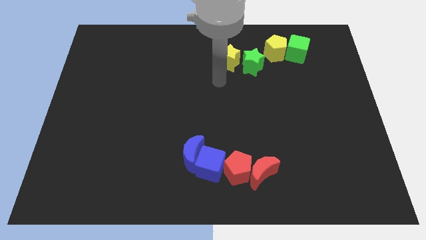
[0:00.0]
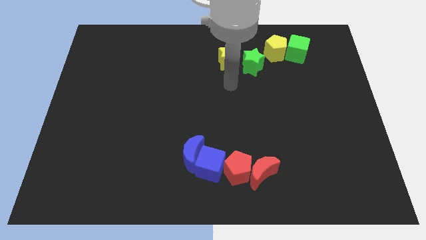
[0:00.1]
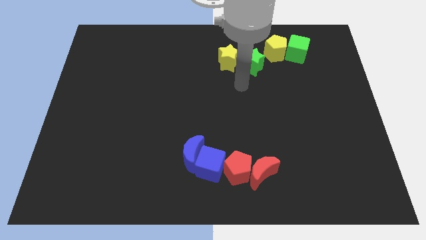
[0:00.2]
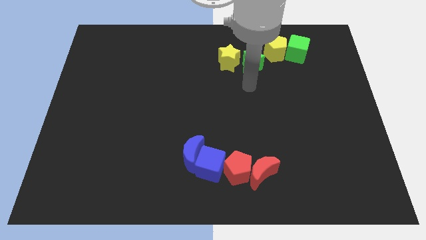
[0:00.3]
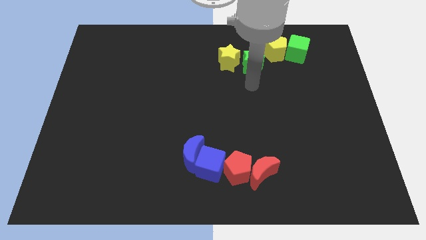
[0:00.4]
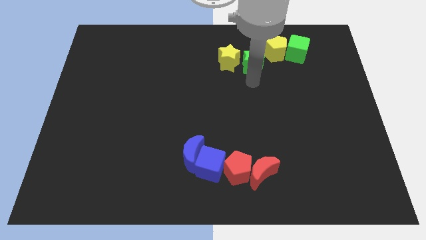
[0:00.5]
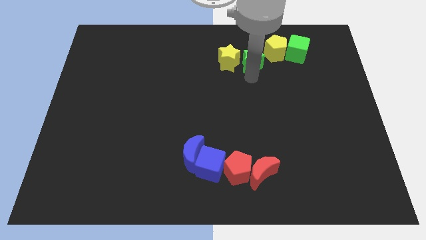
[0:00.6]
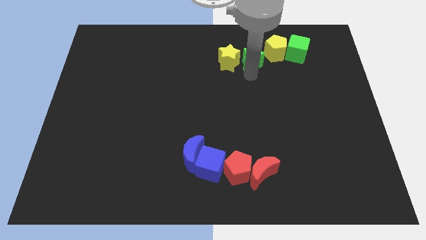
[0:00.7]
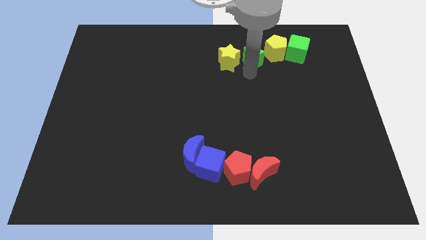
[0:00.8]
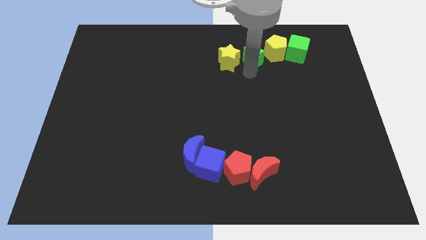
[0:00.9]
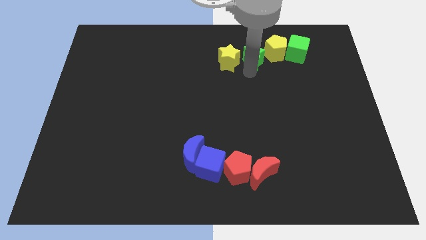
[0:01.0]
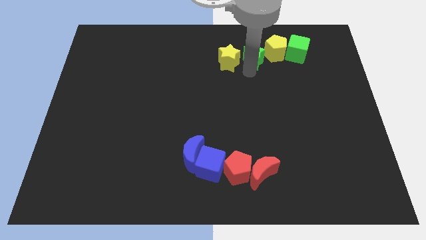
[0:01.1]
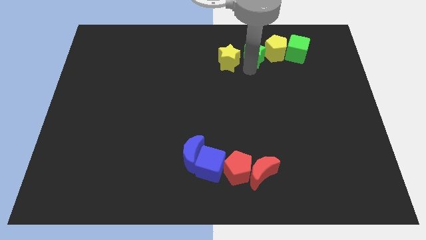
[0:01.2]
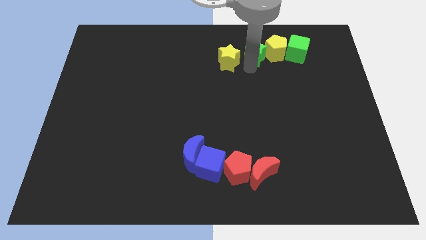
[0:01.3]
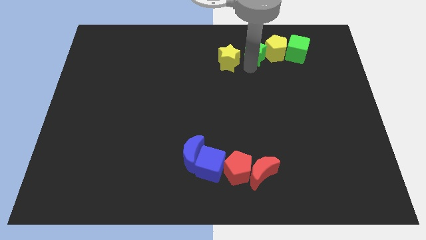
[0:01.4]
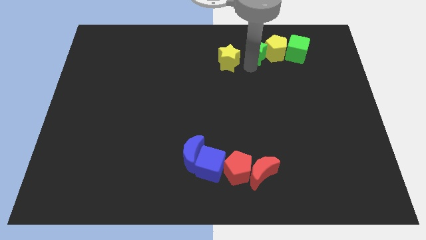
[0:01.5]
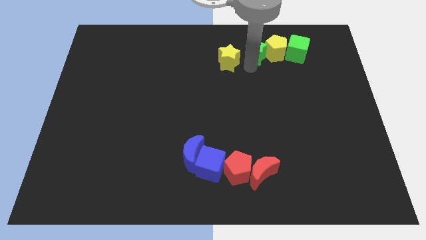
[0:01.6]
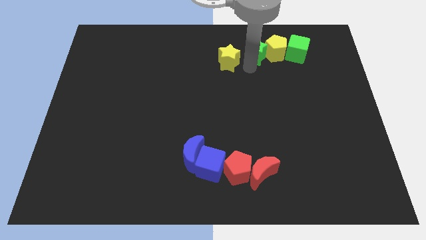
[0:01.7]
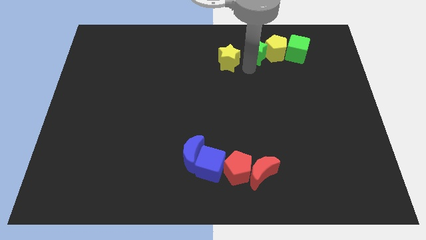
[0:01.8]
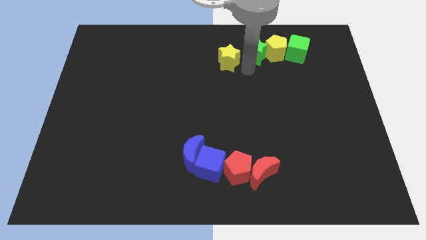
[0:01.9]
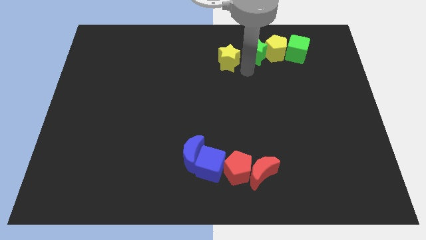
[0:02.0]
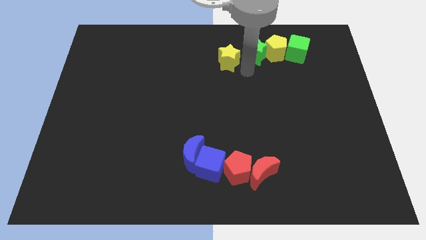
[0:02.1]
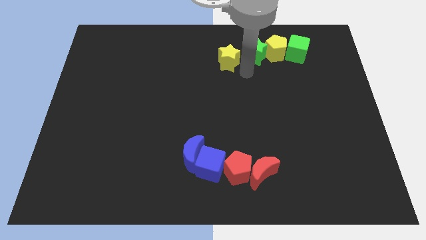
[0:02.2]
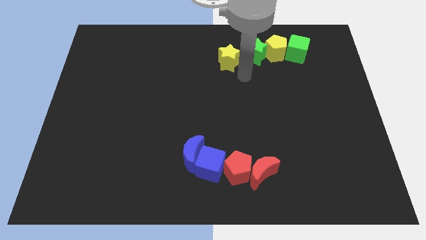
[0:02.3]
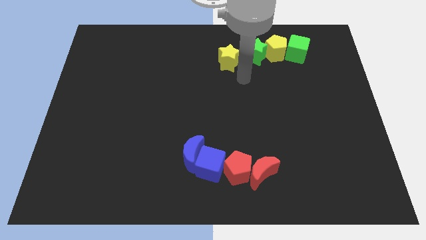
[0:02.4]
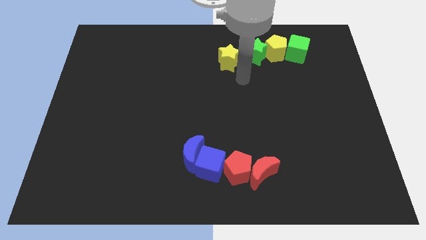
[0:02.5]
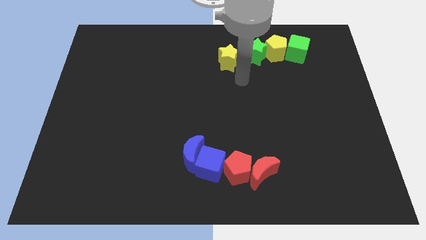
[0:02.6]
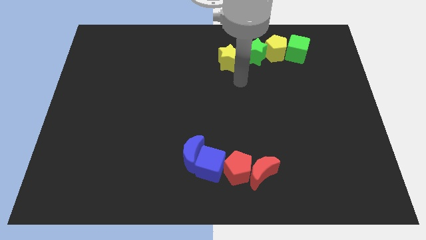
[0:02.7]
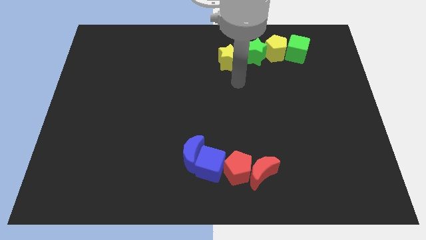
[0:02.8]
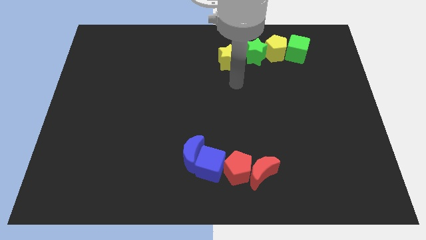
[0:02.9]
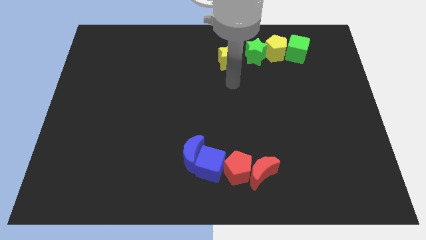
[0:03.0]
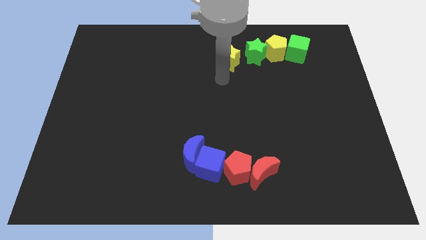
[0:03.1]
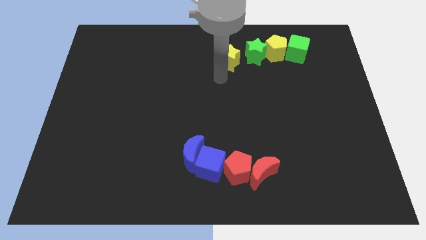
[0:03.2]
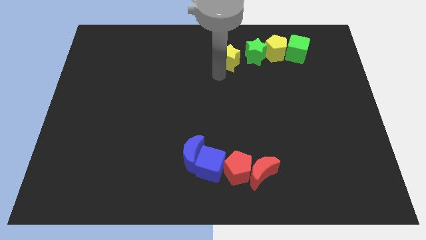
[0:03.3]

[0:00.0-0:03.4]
move the green star left to the yellow pentagon

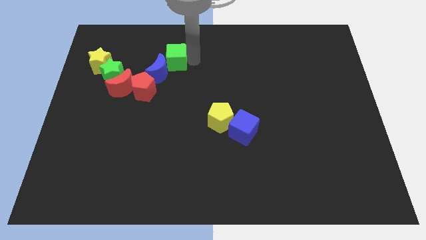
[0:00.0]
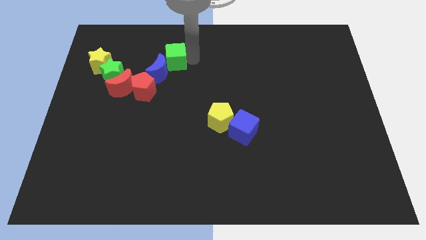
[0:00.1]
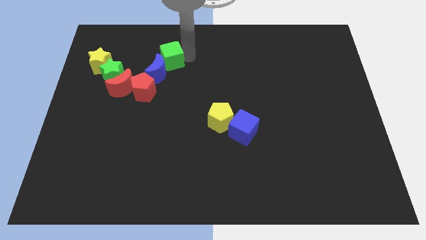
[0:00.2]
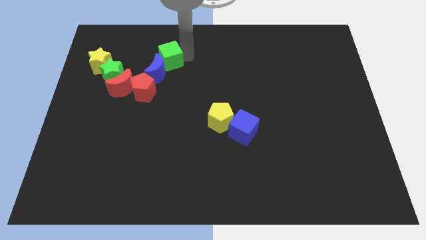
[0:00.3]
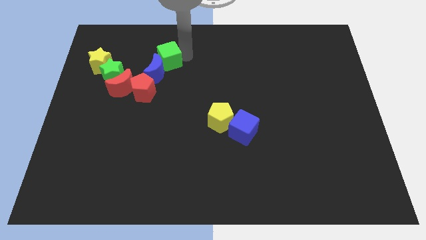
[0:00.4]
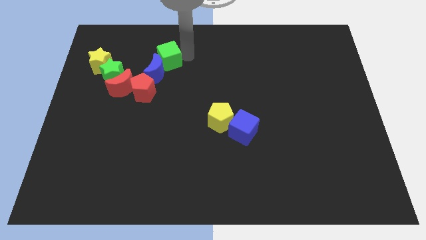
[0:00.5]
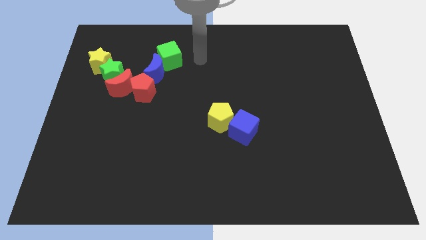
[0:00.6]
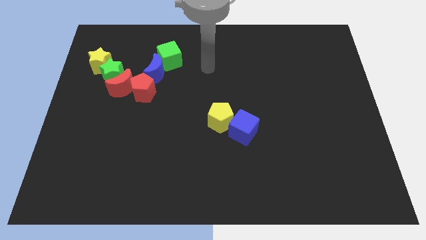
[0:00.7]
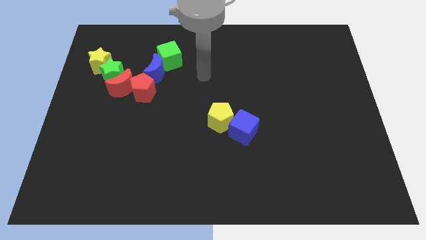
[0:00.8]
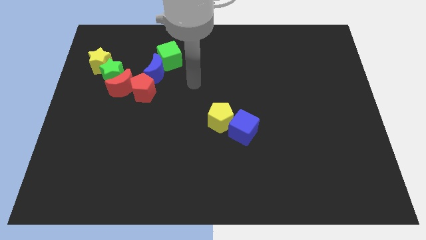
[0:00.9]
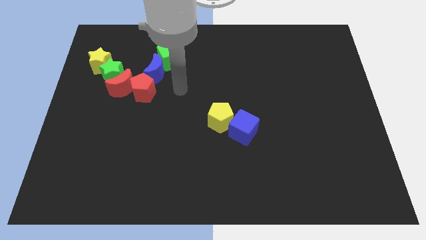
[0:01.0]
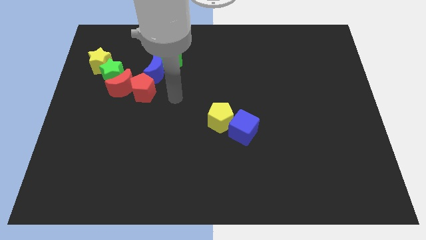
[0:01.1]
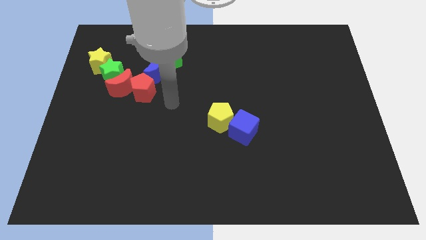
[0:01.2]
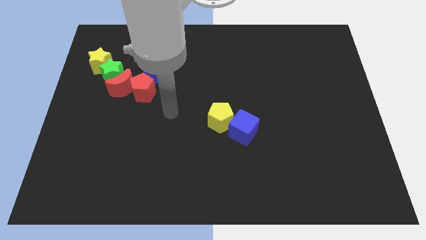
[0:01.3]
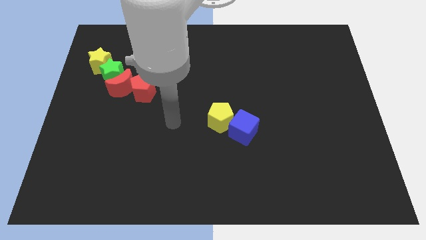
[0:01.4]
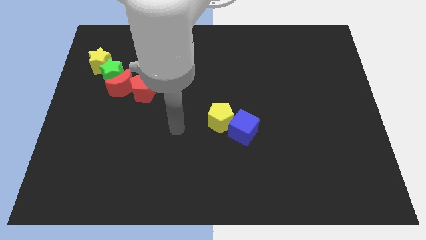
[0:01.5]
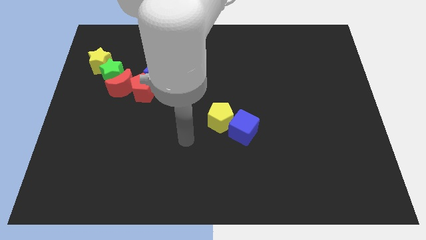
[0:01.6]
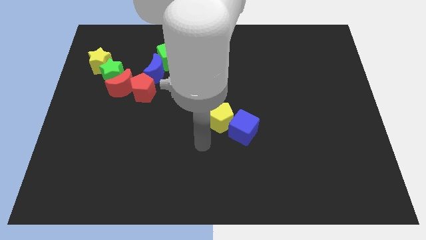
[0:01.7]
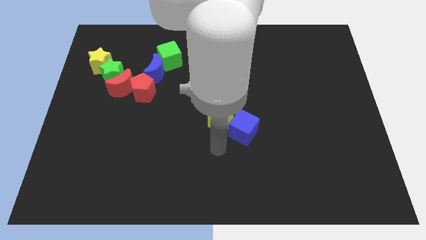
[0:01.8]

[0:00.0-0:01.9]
move your arm near the blue cube

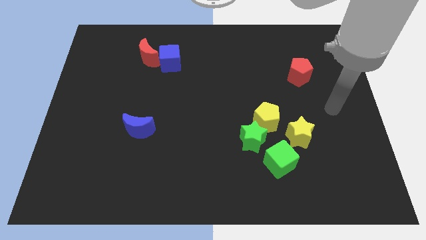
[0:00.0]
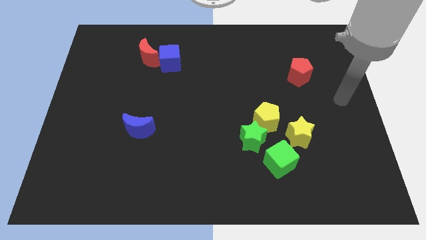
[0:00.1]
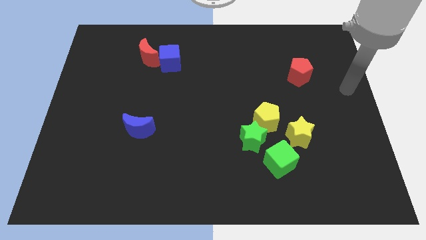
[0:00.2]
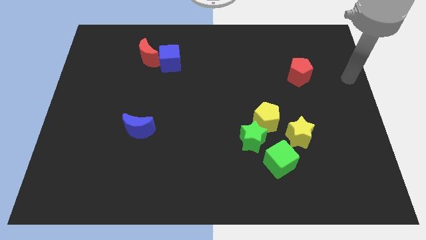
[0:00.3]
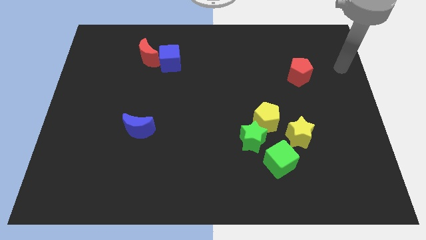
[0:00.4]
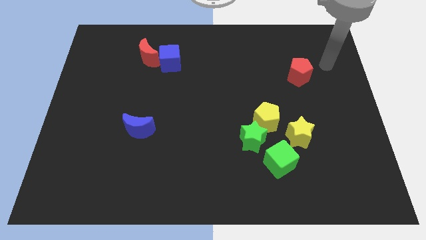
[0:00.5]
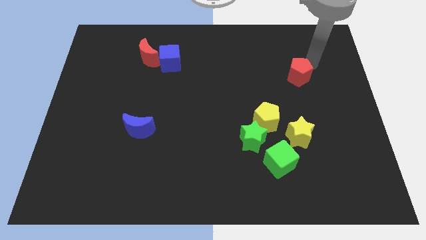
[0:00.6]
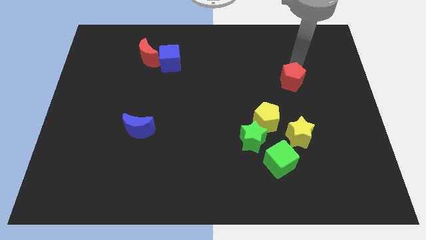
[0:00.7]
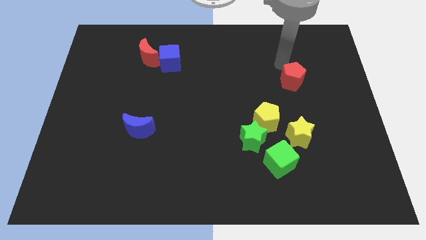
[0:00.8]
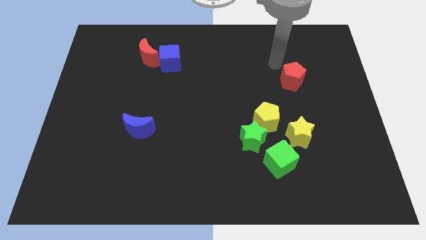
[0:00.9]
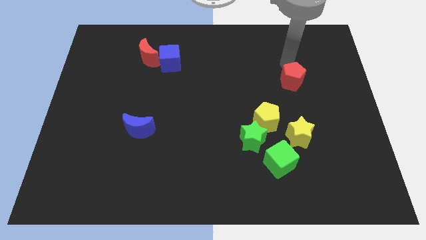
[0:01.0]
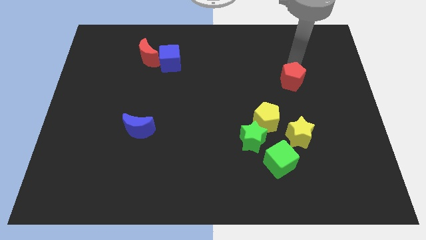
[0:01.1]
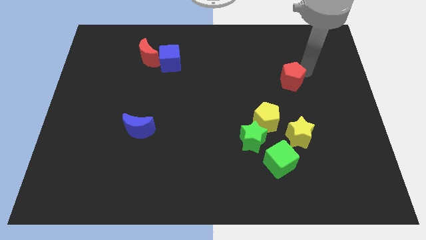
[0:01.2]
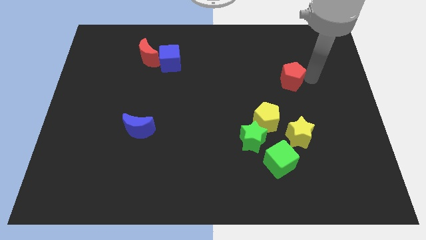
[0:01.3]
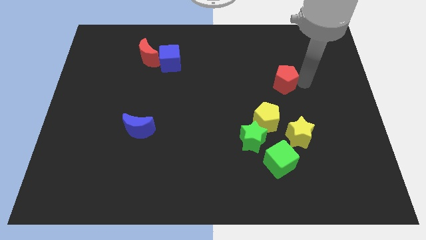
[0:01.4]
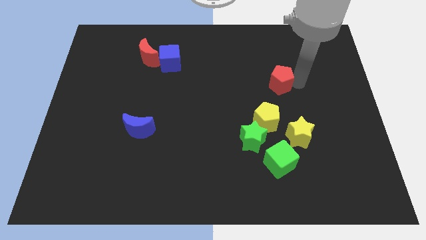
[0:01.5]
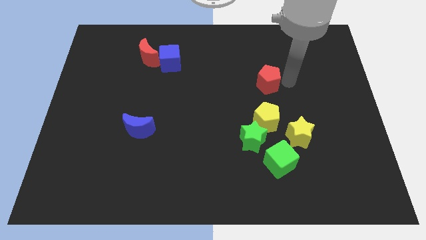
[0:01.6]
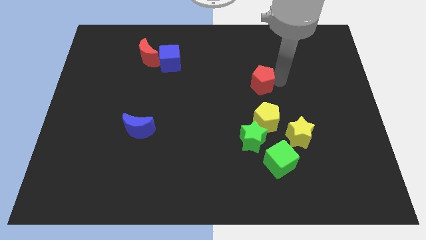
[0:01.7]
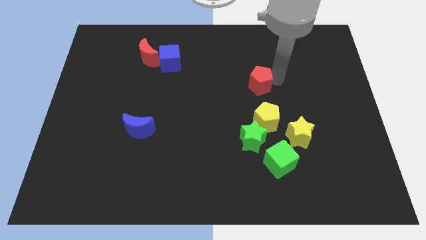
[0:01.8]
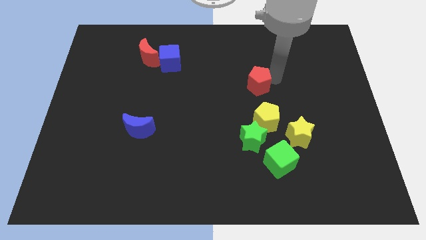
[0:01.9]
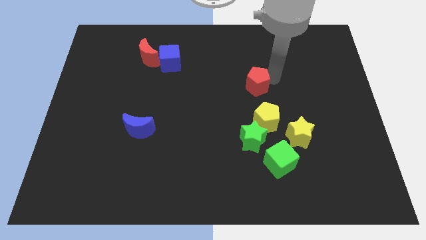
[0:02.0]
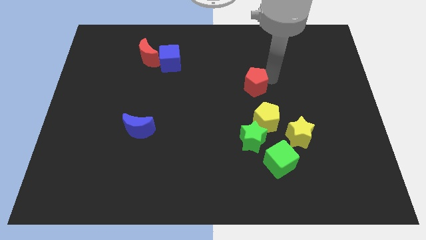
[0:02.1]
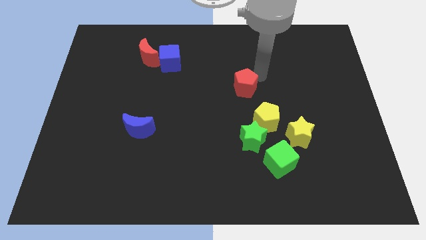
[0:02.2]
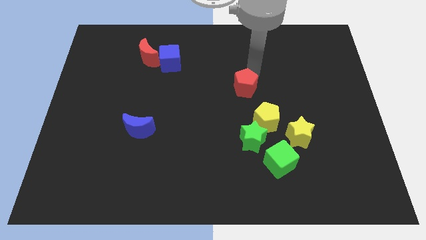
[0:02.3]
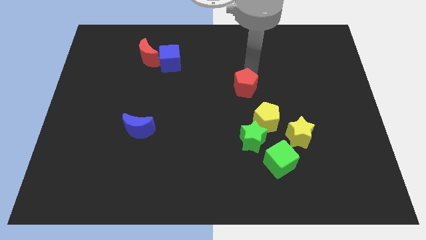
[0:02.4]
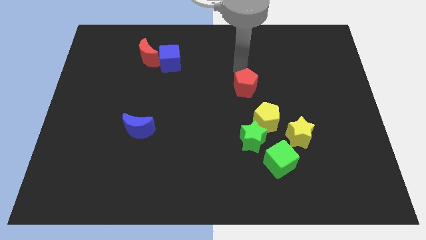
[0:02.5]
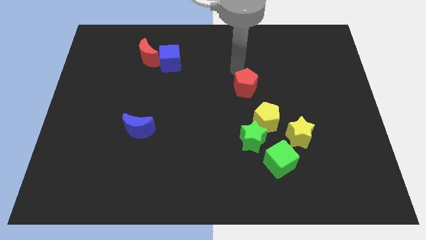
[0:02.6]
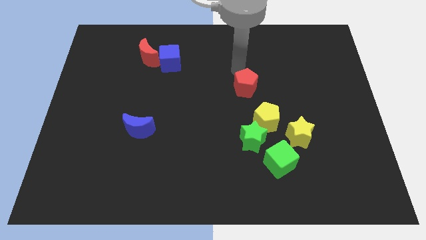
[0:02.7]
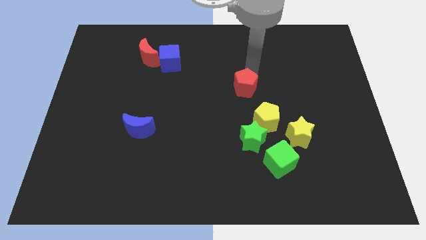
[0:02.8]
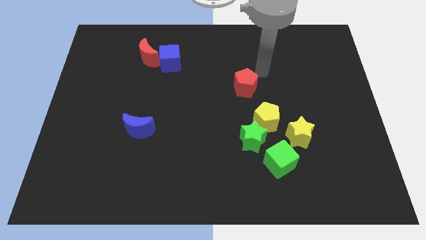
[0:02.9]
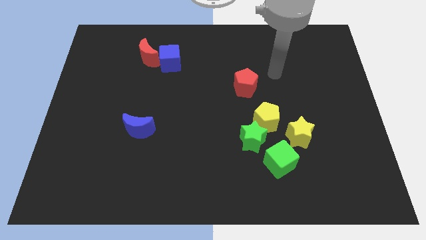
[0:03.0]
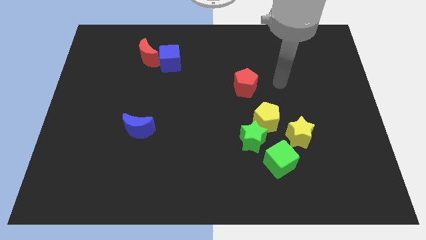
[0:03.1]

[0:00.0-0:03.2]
move the red pentagon diagonally to the top left of the yellow pentagon

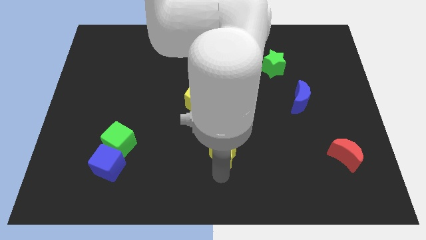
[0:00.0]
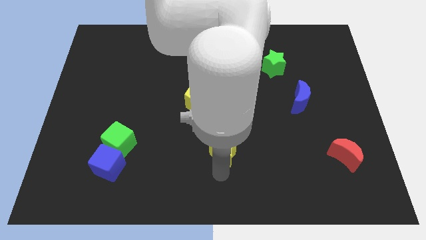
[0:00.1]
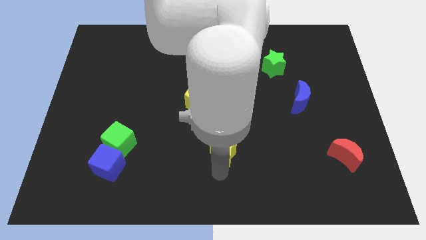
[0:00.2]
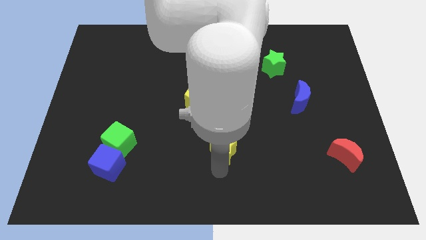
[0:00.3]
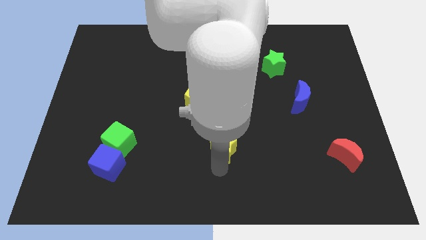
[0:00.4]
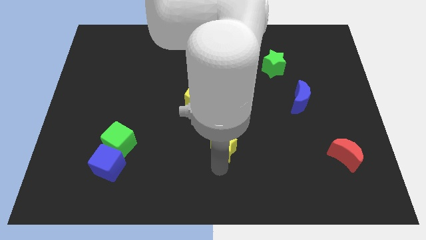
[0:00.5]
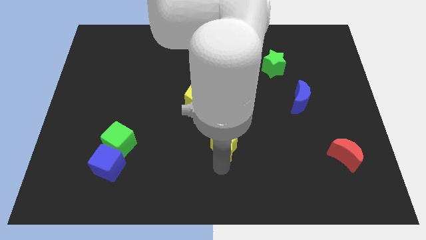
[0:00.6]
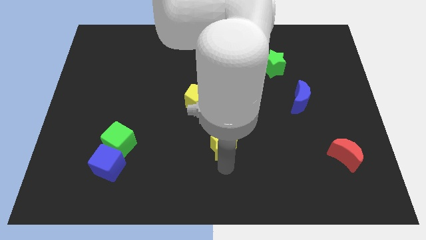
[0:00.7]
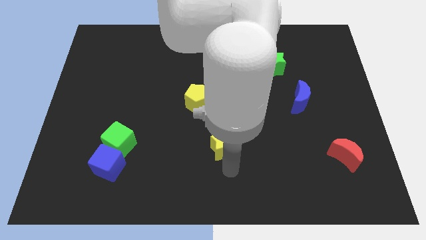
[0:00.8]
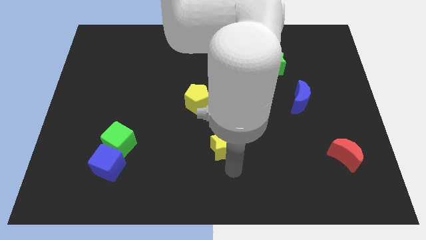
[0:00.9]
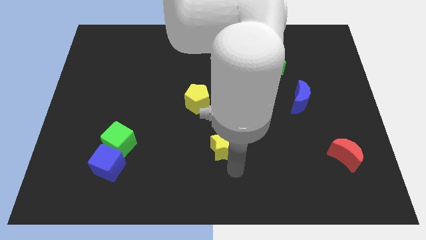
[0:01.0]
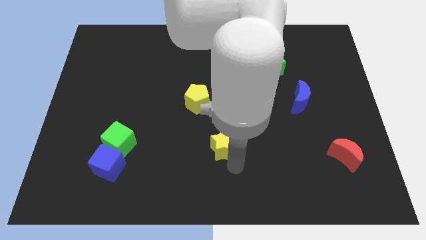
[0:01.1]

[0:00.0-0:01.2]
push yellow star towards the center of the board
